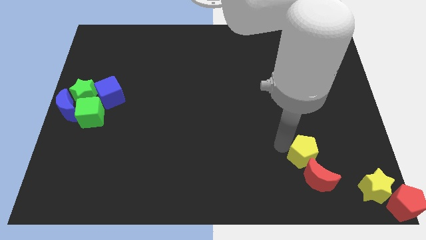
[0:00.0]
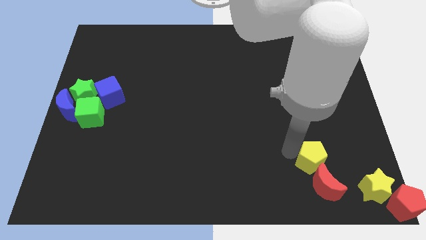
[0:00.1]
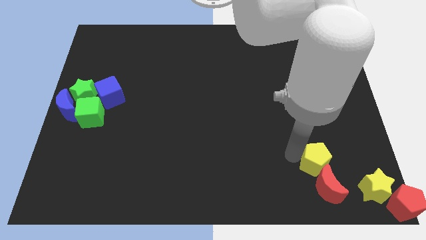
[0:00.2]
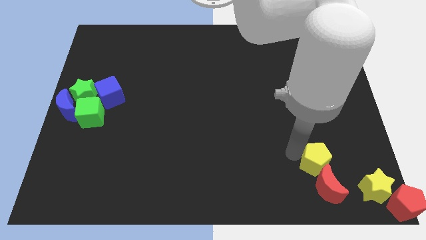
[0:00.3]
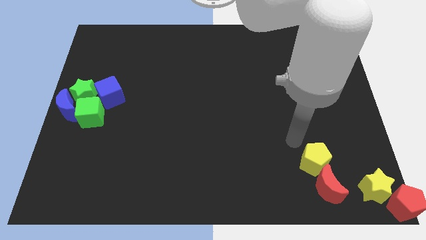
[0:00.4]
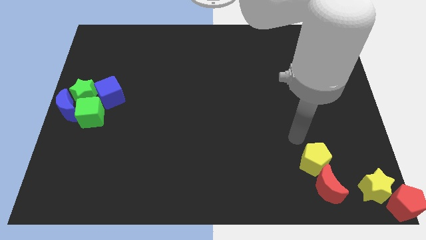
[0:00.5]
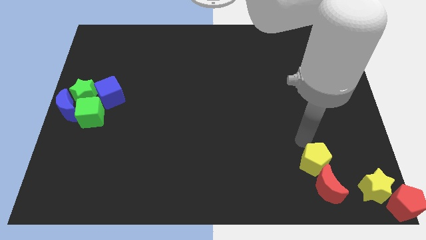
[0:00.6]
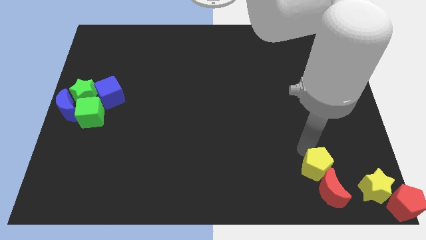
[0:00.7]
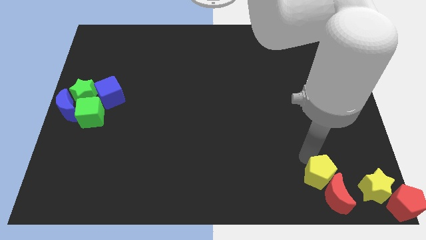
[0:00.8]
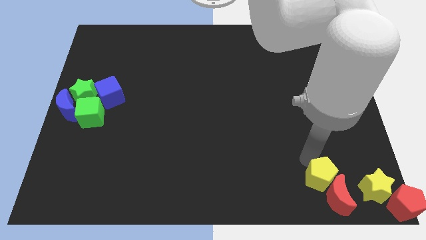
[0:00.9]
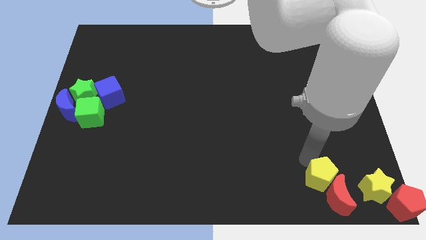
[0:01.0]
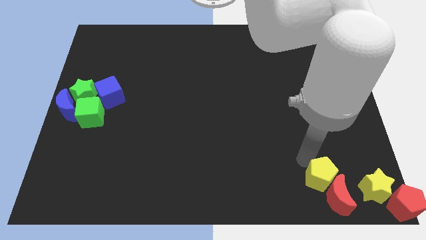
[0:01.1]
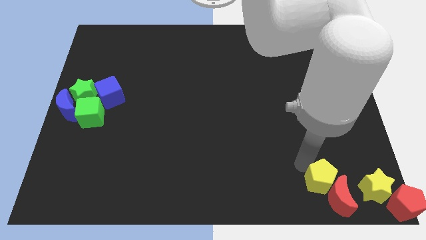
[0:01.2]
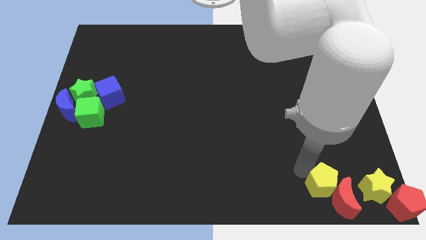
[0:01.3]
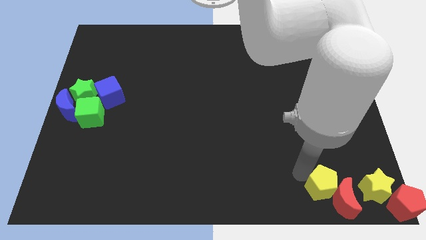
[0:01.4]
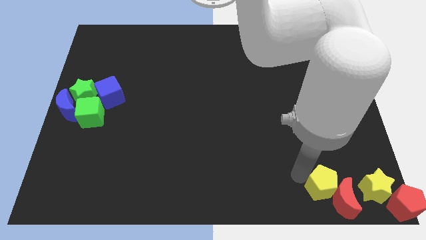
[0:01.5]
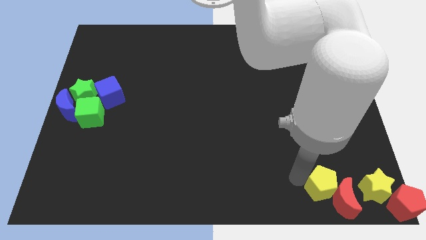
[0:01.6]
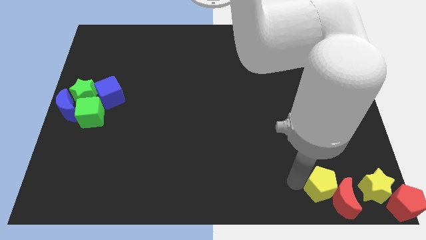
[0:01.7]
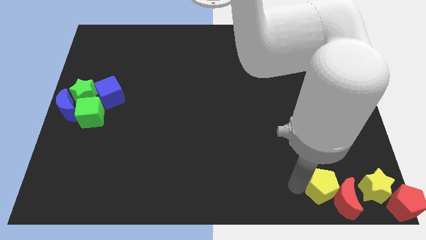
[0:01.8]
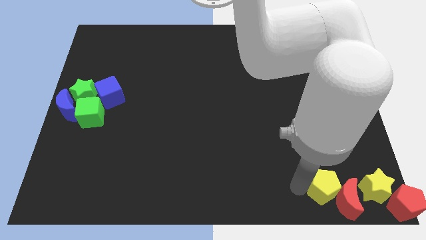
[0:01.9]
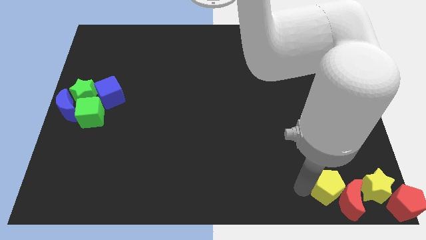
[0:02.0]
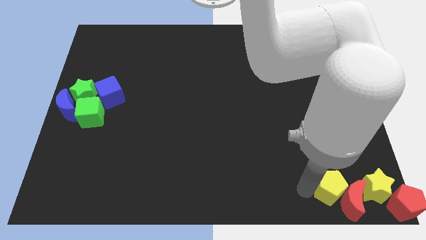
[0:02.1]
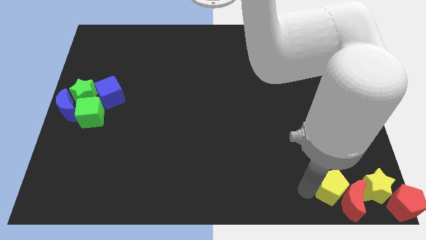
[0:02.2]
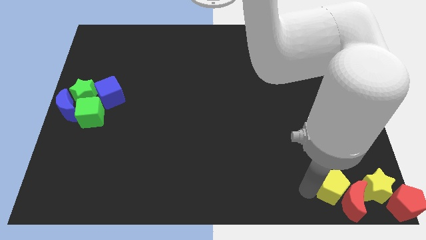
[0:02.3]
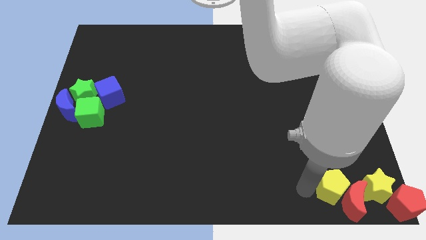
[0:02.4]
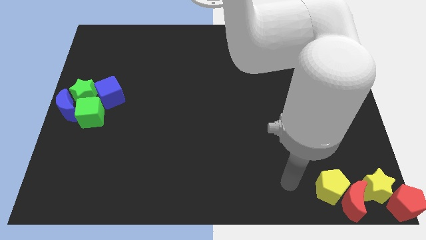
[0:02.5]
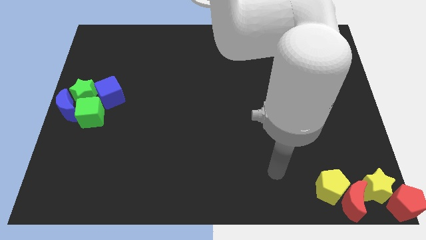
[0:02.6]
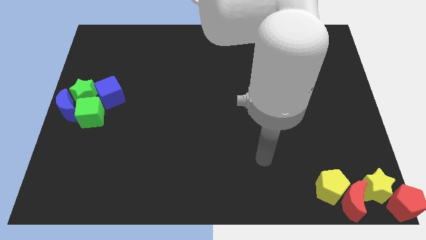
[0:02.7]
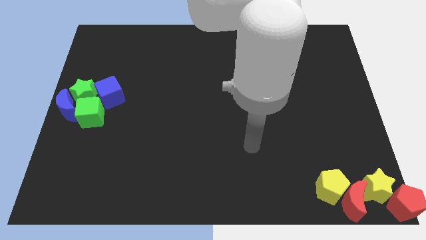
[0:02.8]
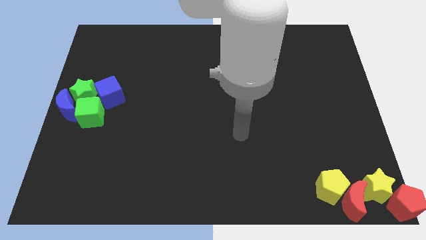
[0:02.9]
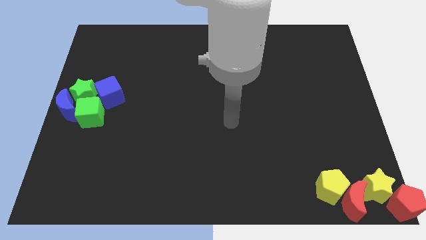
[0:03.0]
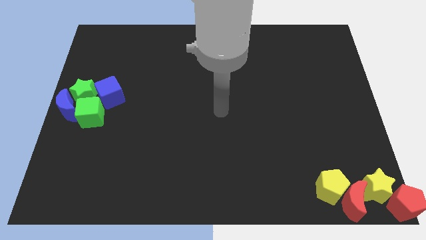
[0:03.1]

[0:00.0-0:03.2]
push the yellow pentagon along with red crescent to the left of the yellow star

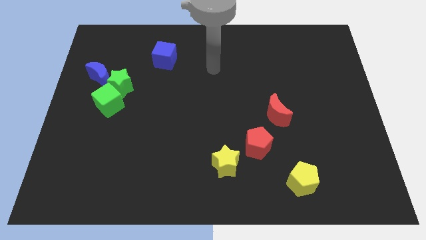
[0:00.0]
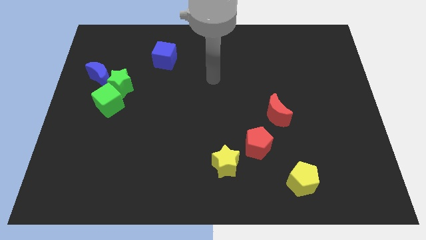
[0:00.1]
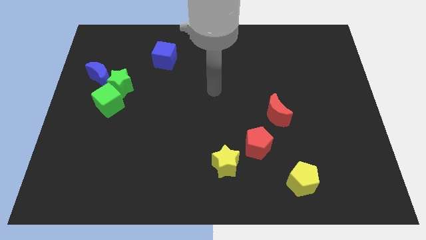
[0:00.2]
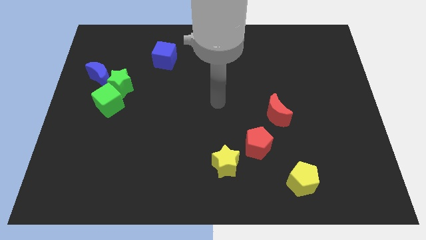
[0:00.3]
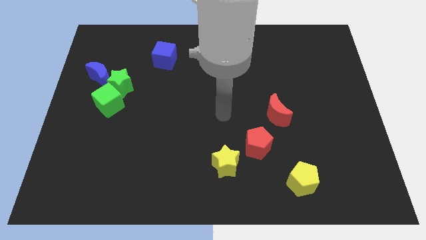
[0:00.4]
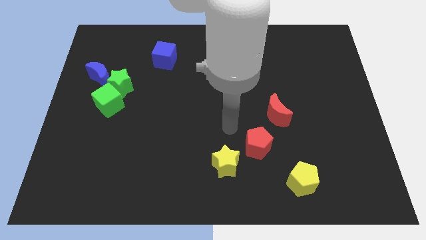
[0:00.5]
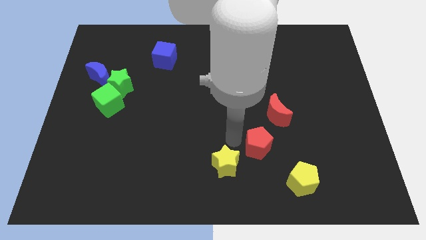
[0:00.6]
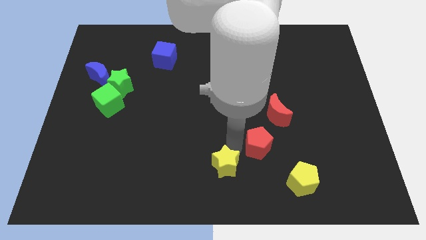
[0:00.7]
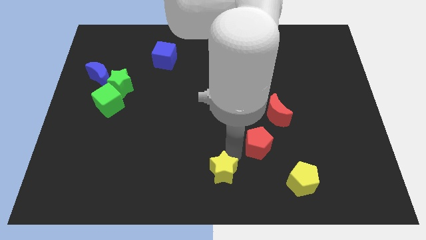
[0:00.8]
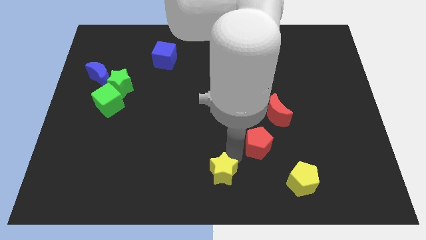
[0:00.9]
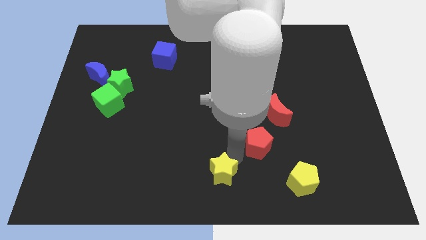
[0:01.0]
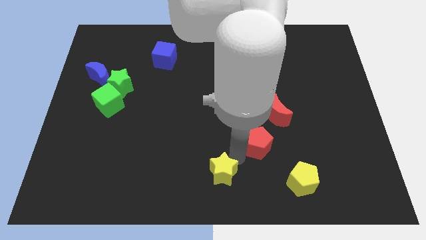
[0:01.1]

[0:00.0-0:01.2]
move the yellow star slightly to the bottom
